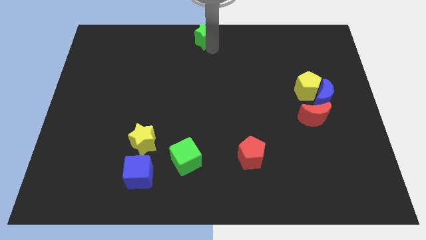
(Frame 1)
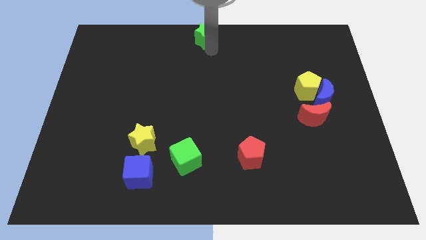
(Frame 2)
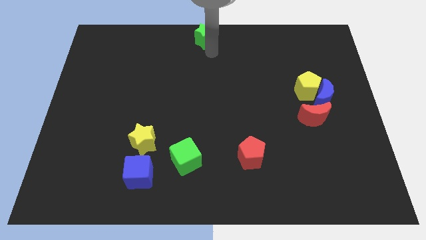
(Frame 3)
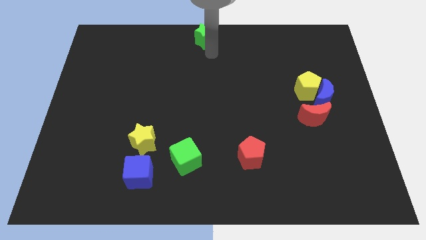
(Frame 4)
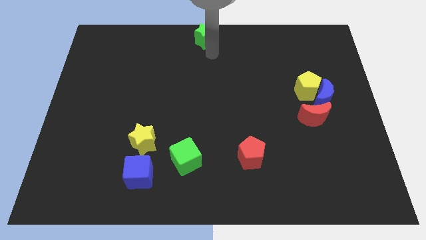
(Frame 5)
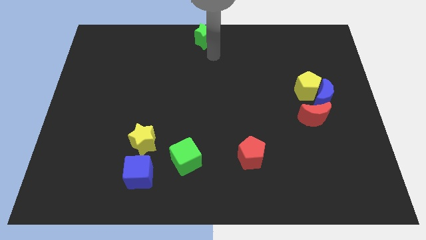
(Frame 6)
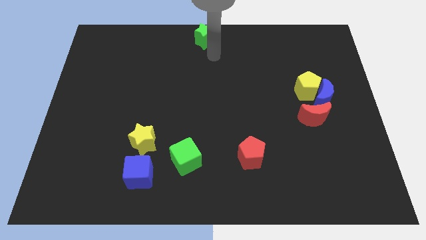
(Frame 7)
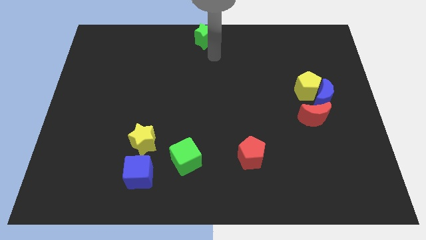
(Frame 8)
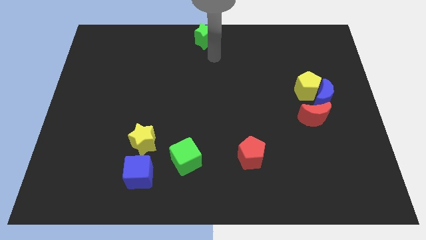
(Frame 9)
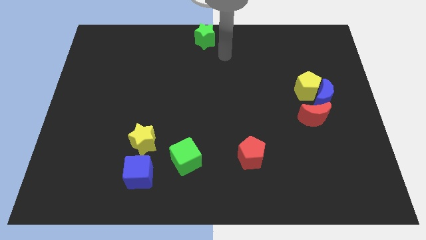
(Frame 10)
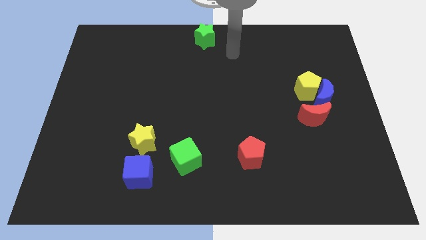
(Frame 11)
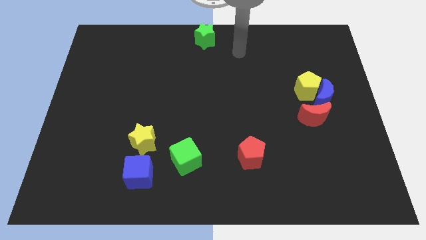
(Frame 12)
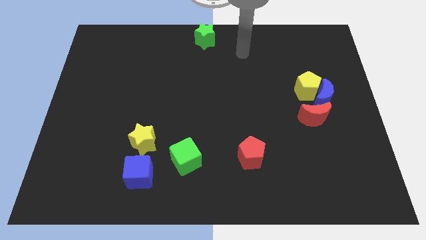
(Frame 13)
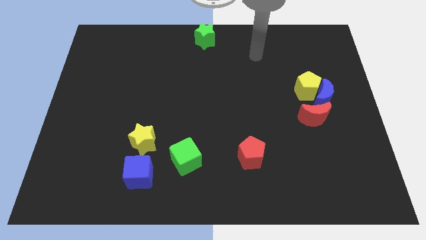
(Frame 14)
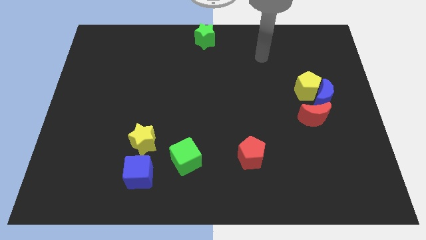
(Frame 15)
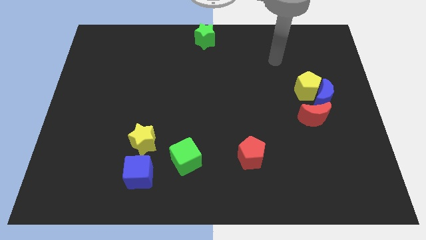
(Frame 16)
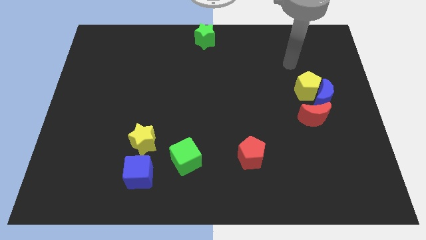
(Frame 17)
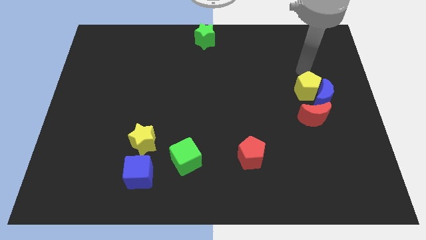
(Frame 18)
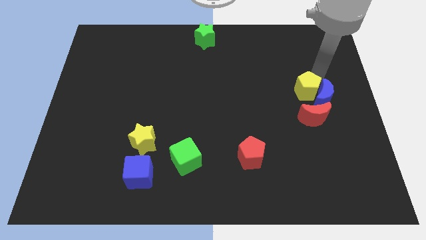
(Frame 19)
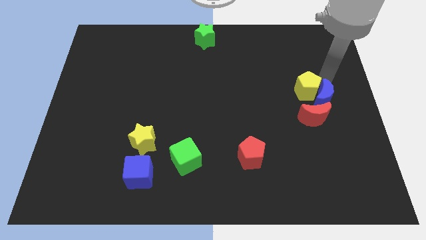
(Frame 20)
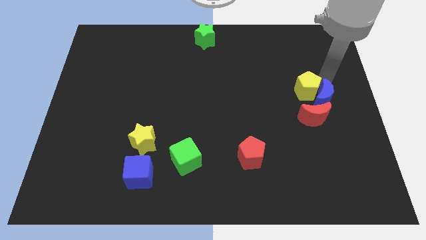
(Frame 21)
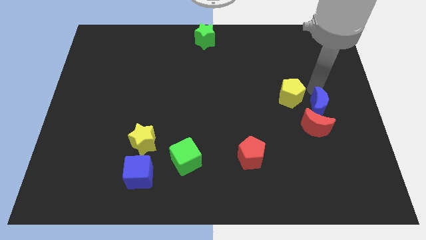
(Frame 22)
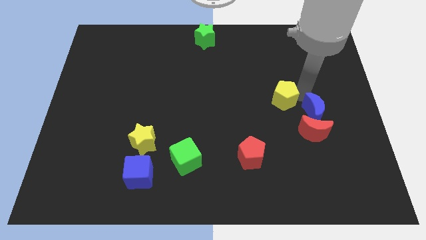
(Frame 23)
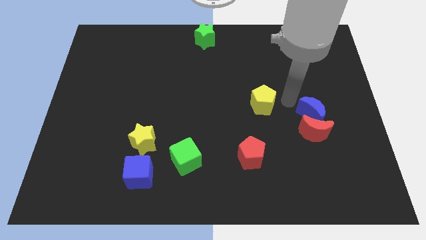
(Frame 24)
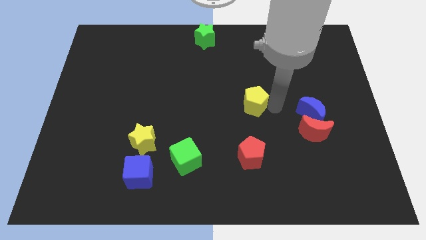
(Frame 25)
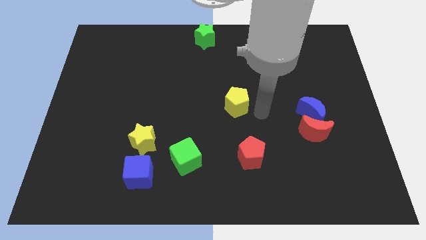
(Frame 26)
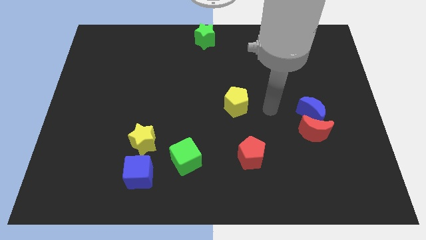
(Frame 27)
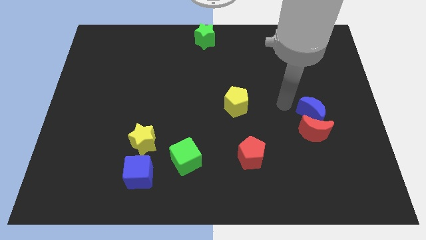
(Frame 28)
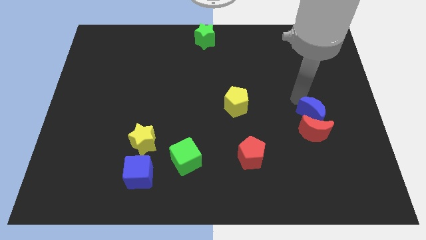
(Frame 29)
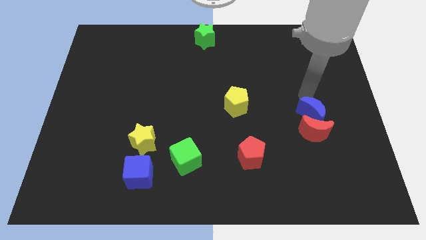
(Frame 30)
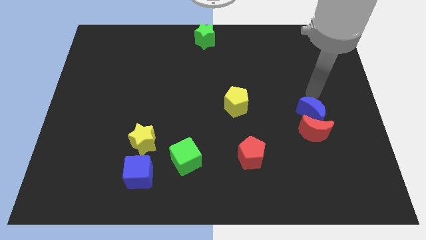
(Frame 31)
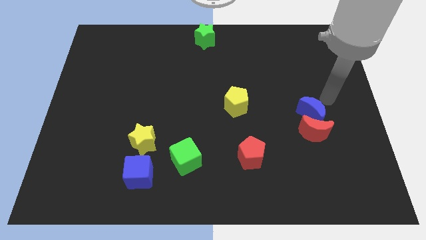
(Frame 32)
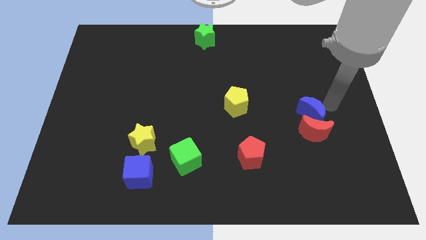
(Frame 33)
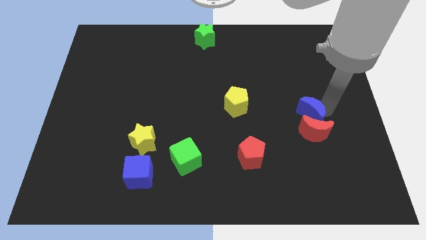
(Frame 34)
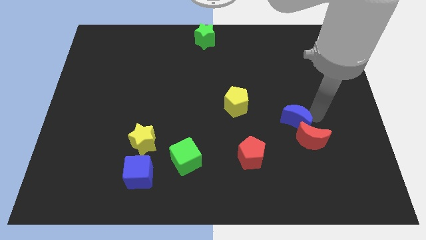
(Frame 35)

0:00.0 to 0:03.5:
separate the yellow pentagon from the group of blocks

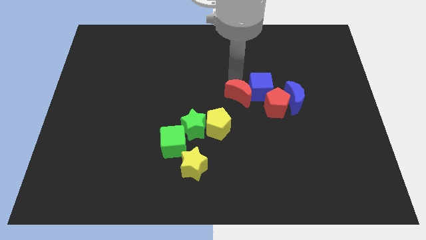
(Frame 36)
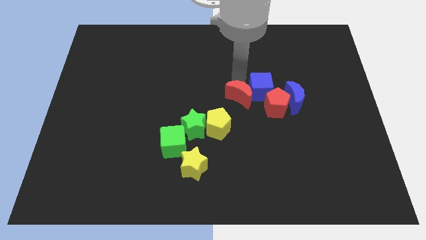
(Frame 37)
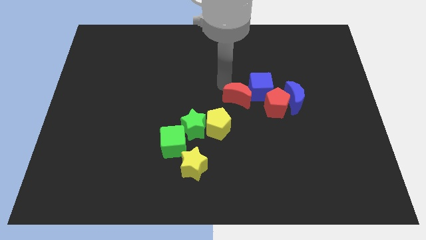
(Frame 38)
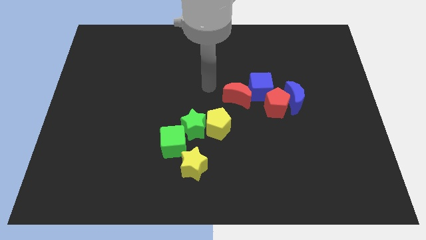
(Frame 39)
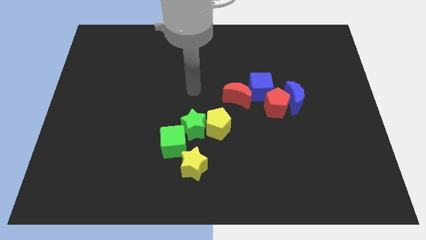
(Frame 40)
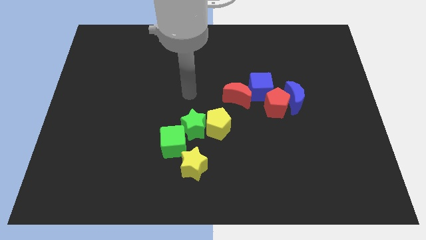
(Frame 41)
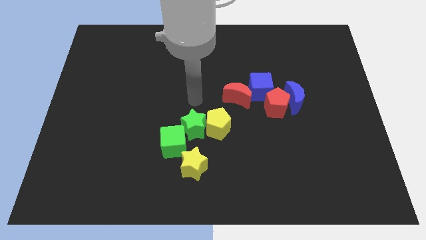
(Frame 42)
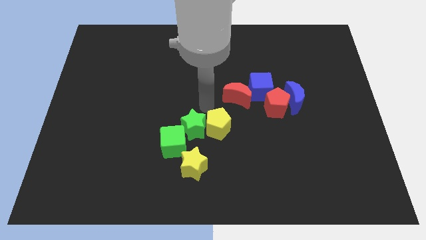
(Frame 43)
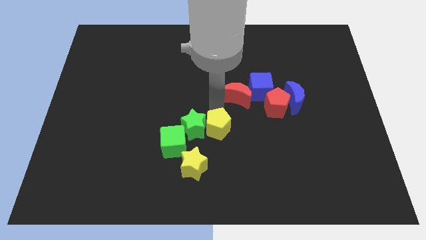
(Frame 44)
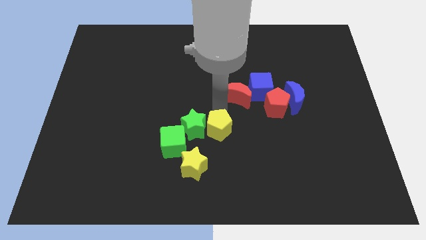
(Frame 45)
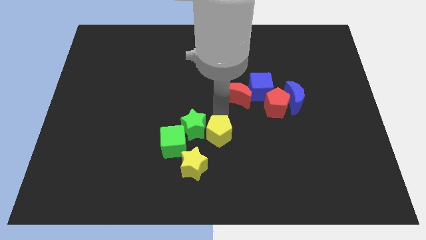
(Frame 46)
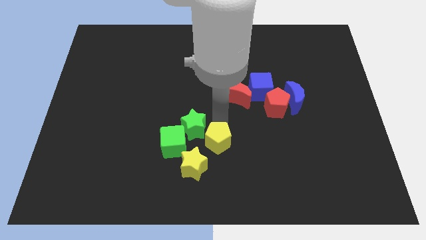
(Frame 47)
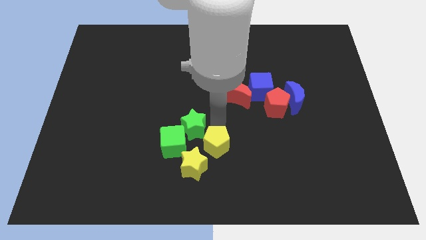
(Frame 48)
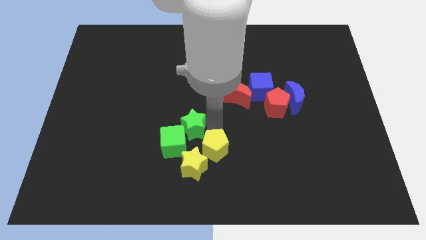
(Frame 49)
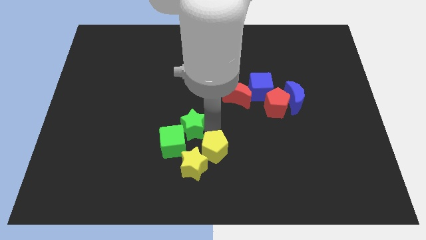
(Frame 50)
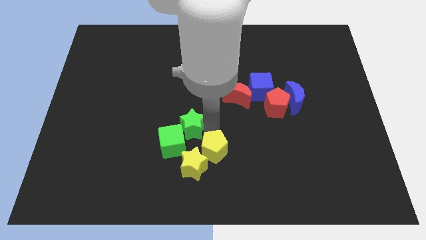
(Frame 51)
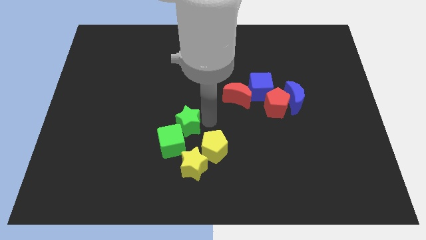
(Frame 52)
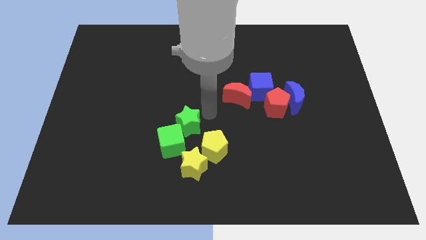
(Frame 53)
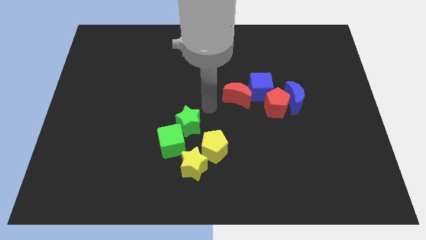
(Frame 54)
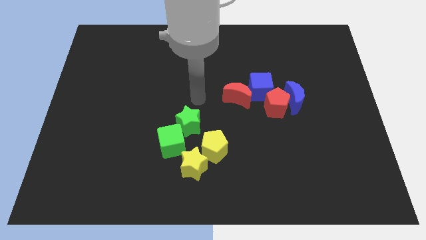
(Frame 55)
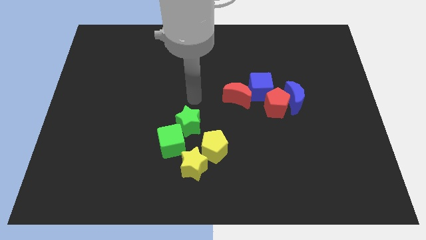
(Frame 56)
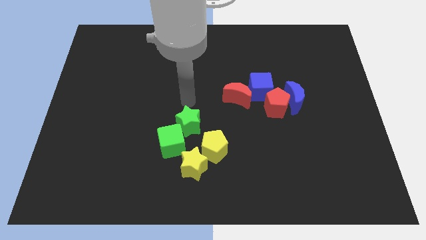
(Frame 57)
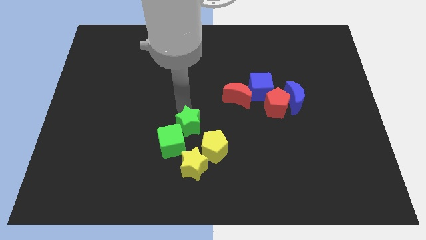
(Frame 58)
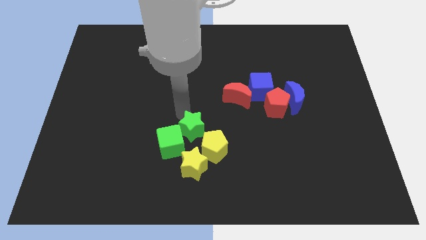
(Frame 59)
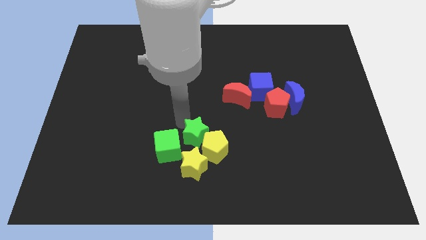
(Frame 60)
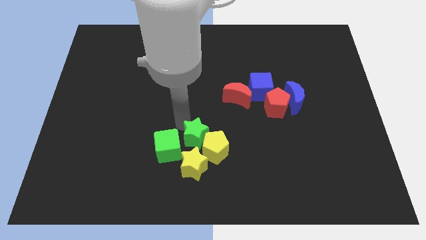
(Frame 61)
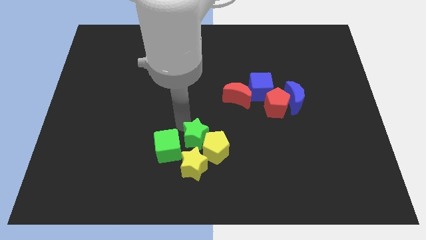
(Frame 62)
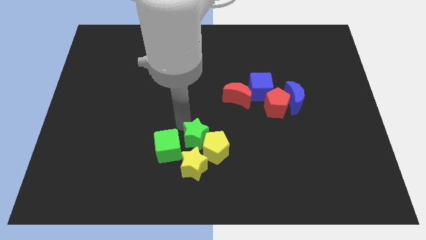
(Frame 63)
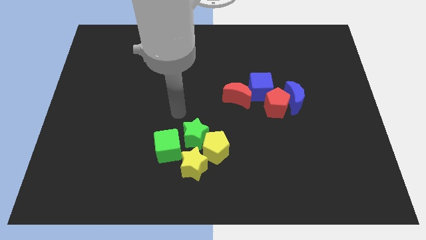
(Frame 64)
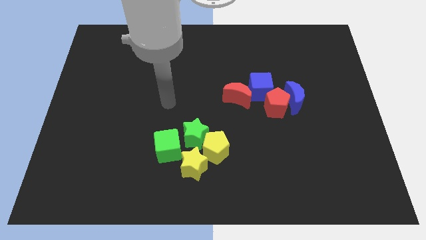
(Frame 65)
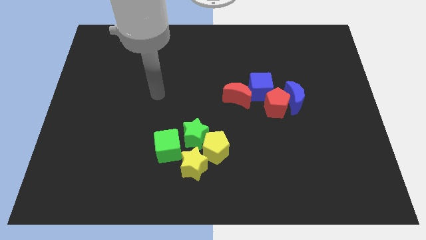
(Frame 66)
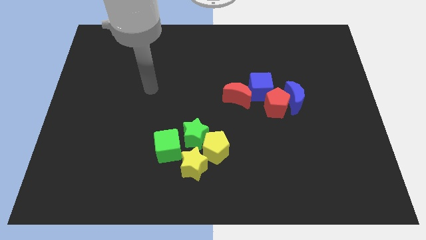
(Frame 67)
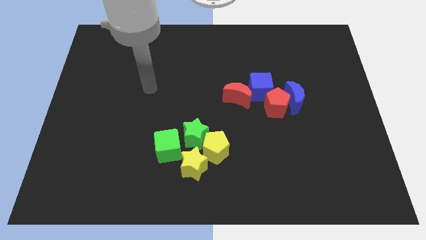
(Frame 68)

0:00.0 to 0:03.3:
push yellow pentagon and the green star into the yellow star

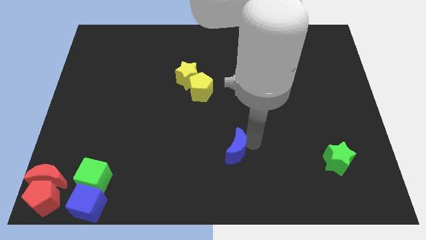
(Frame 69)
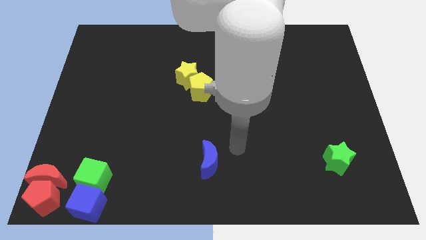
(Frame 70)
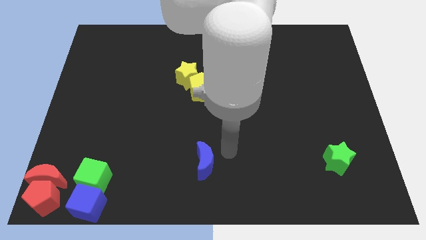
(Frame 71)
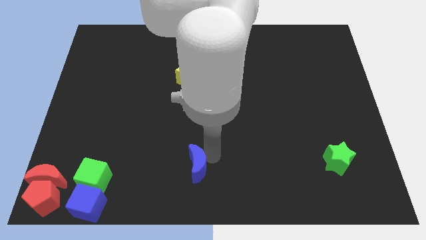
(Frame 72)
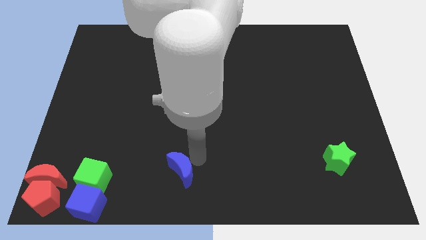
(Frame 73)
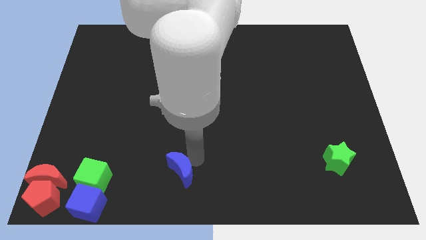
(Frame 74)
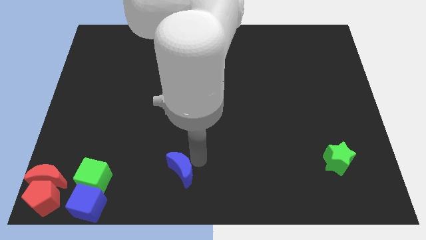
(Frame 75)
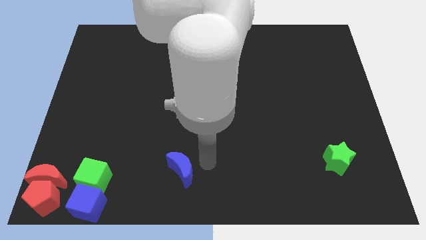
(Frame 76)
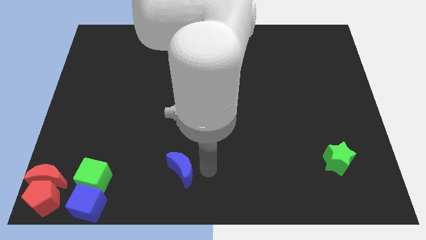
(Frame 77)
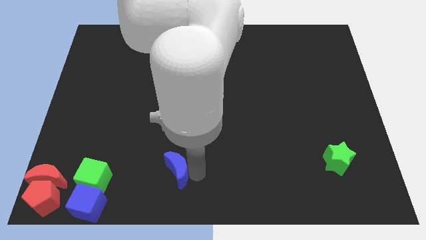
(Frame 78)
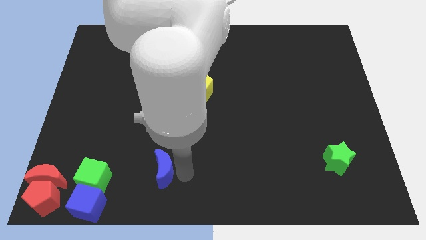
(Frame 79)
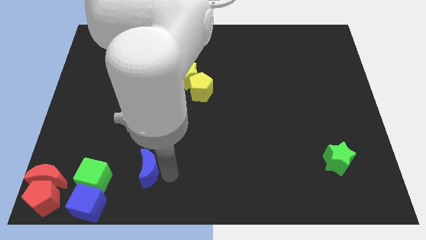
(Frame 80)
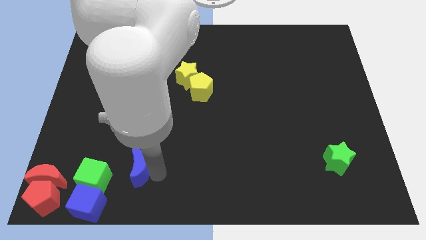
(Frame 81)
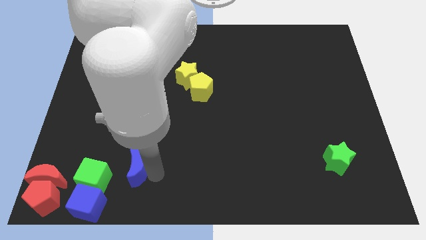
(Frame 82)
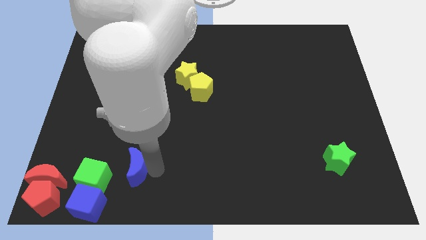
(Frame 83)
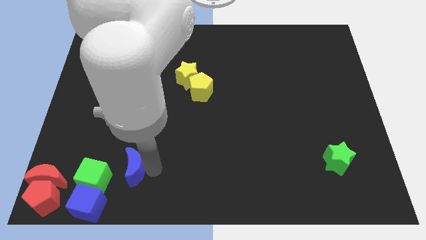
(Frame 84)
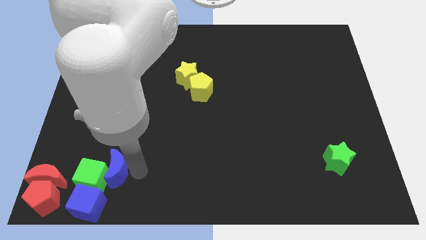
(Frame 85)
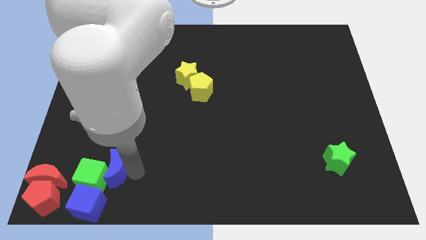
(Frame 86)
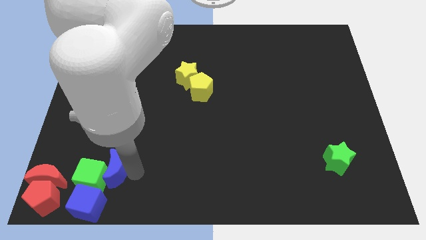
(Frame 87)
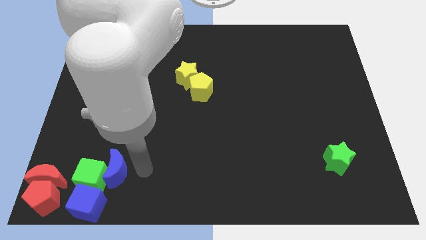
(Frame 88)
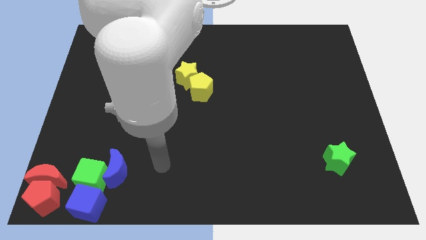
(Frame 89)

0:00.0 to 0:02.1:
move the blue moon into the green cube
